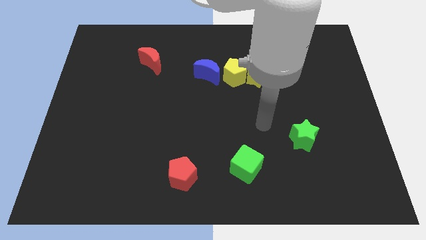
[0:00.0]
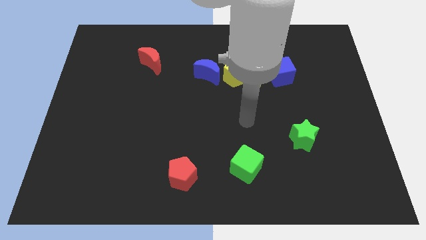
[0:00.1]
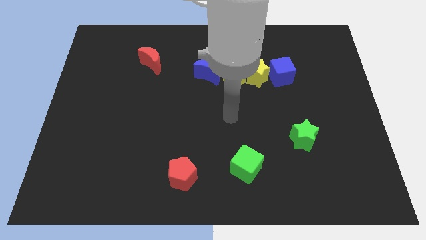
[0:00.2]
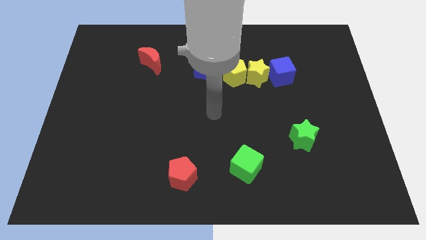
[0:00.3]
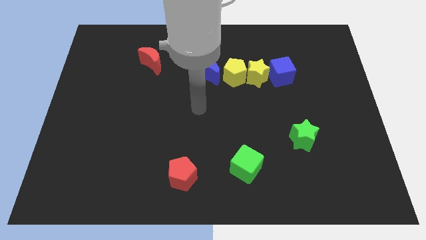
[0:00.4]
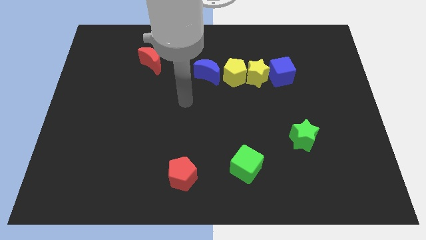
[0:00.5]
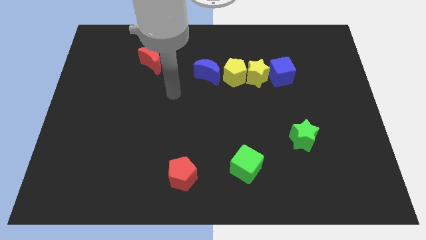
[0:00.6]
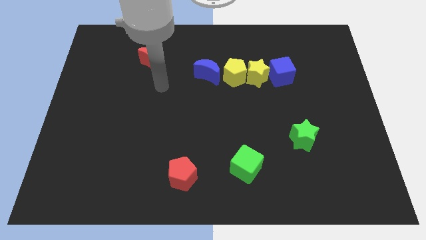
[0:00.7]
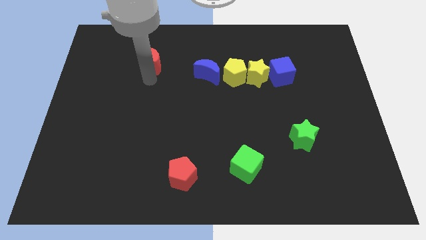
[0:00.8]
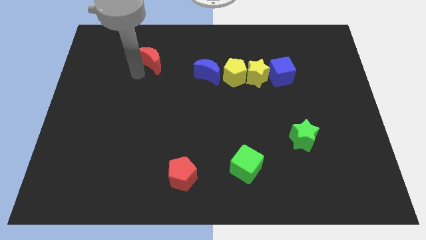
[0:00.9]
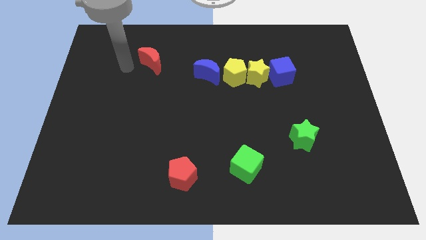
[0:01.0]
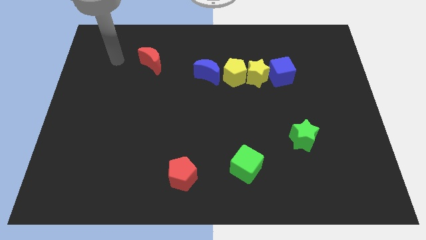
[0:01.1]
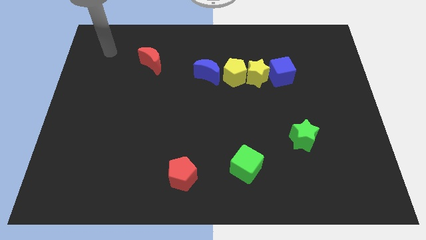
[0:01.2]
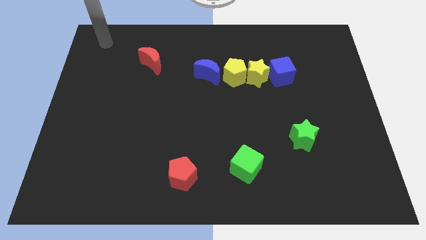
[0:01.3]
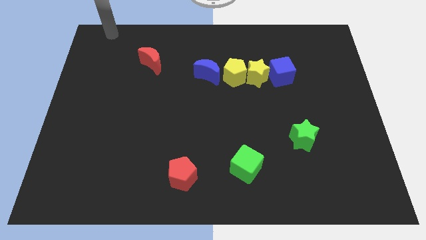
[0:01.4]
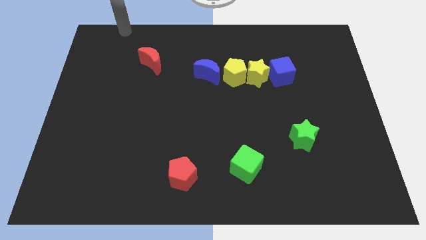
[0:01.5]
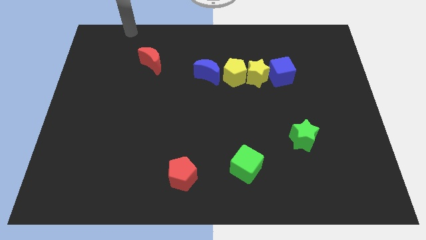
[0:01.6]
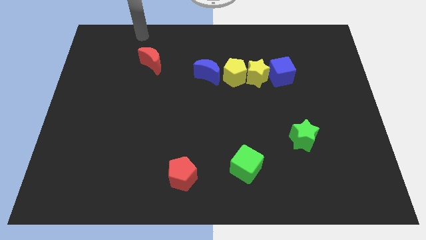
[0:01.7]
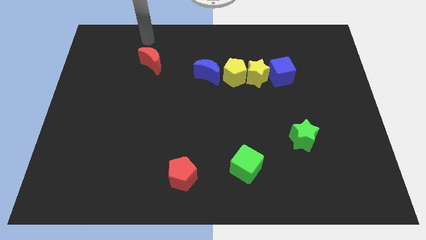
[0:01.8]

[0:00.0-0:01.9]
move the arm around the red crescent

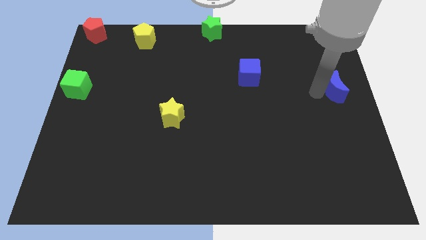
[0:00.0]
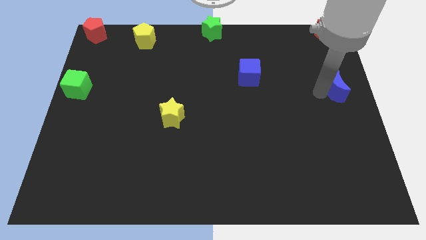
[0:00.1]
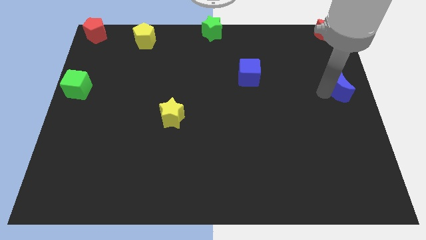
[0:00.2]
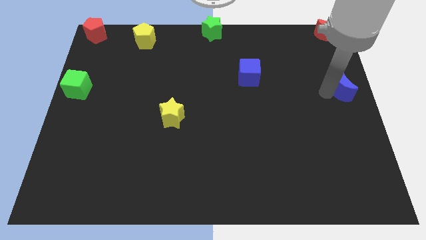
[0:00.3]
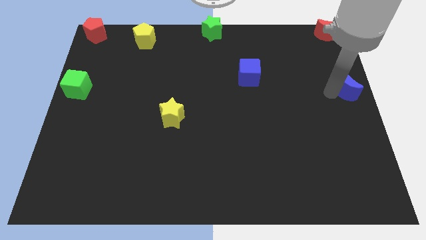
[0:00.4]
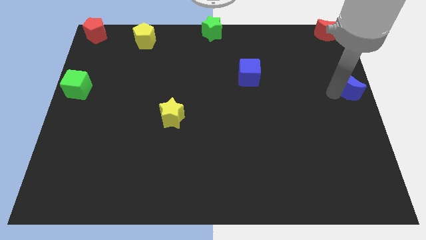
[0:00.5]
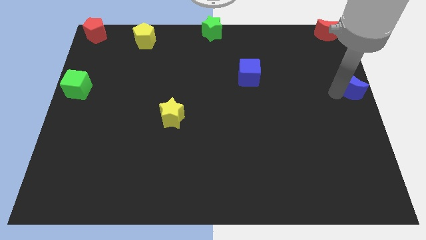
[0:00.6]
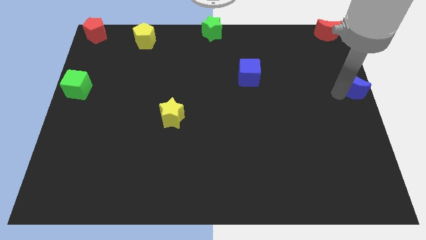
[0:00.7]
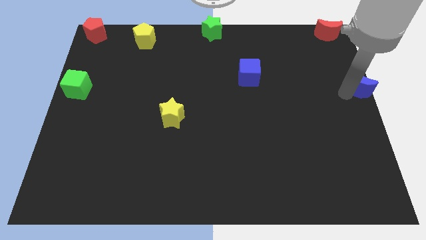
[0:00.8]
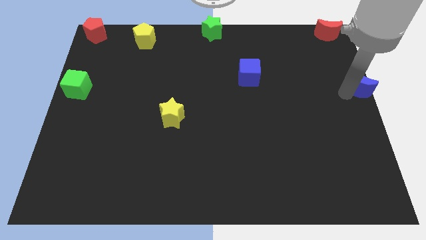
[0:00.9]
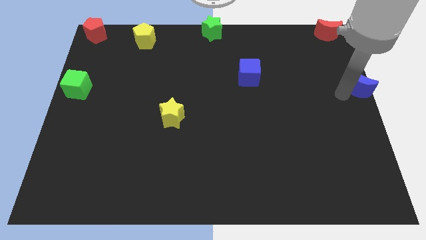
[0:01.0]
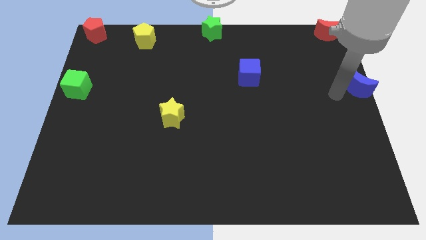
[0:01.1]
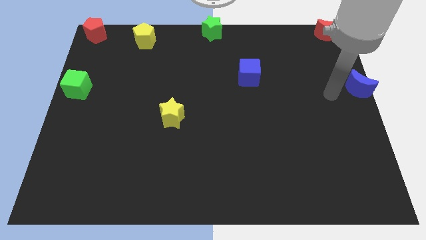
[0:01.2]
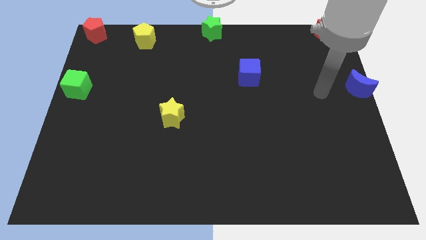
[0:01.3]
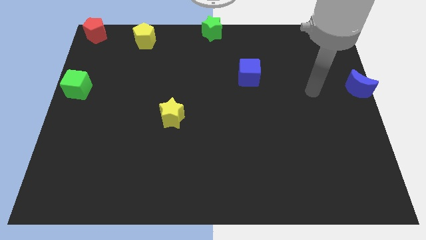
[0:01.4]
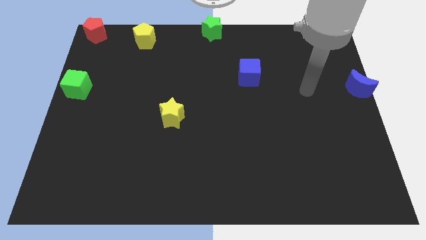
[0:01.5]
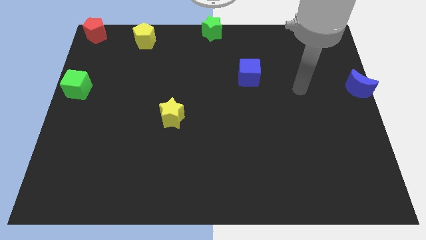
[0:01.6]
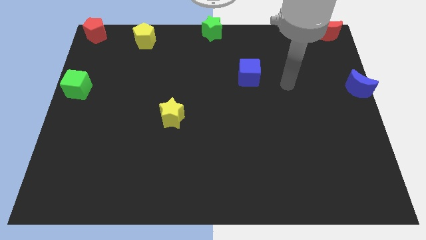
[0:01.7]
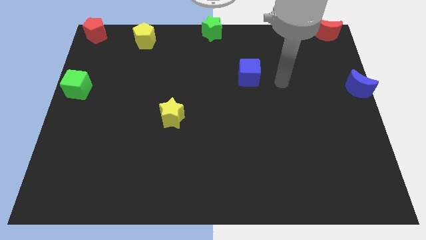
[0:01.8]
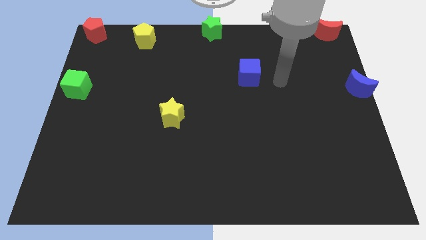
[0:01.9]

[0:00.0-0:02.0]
move blue cube to the right of the board

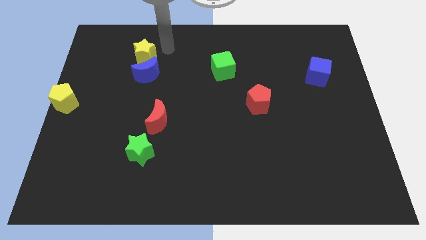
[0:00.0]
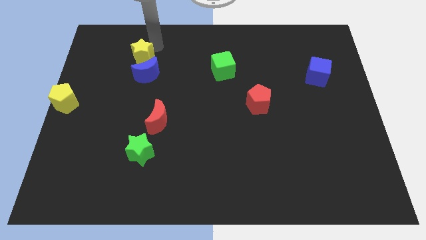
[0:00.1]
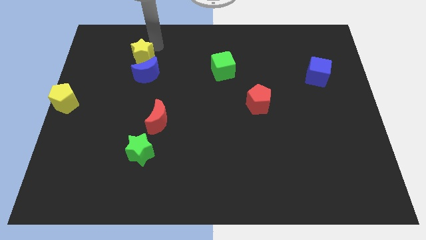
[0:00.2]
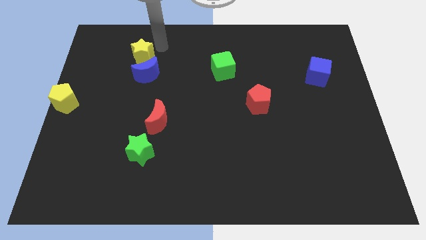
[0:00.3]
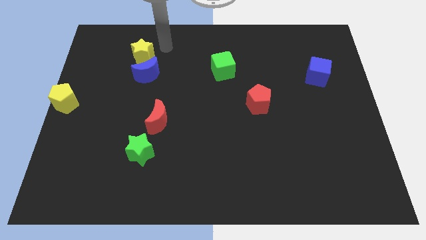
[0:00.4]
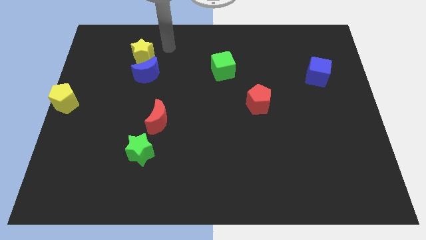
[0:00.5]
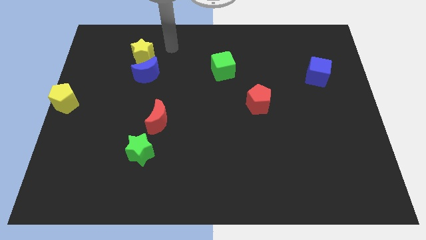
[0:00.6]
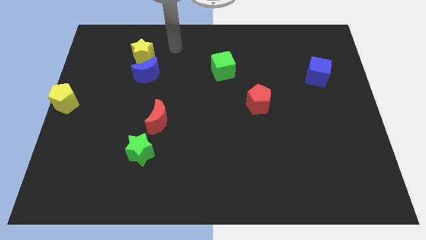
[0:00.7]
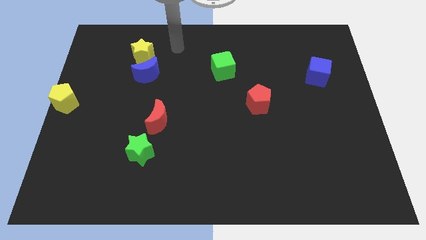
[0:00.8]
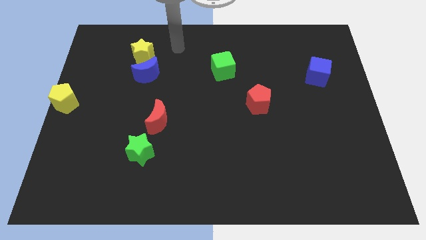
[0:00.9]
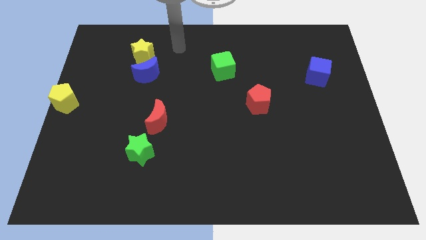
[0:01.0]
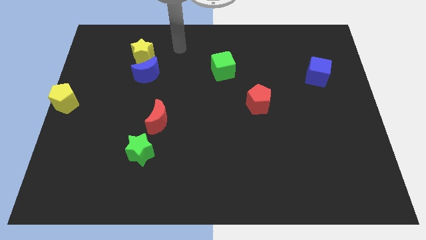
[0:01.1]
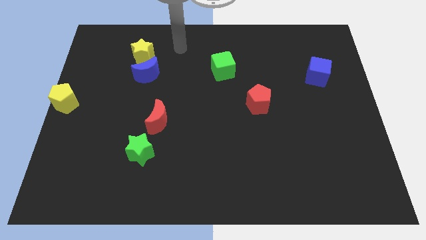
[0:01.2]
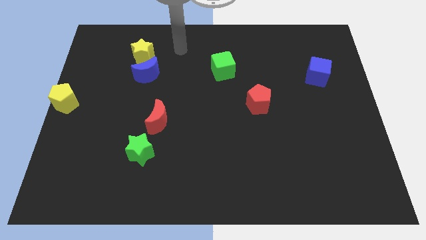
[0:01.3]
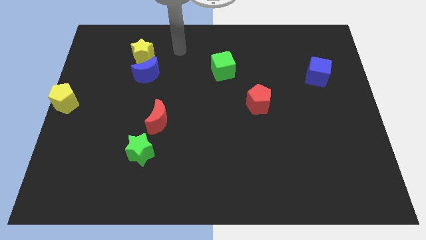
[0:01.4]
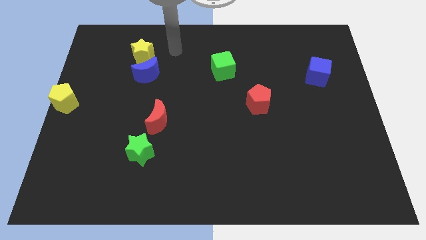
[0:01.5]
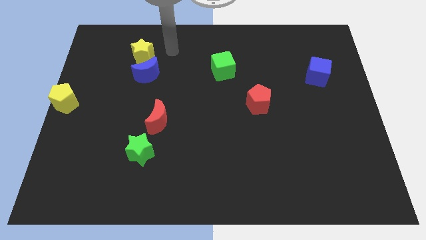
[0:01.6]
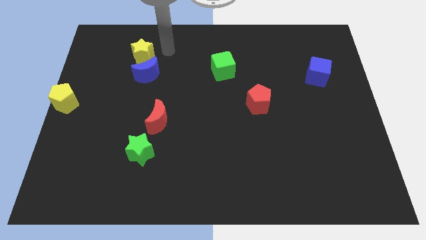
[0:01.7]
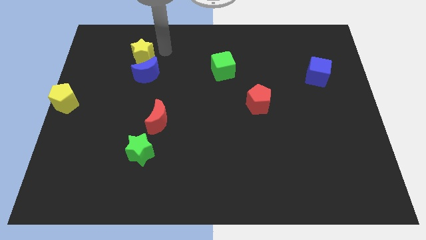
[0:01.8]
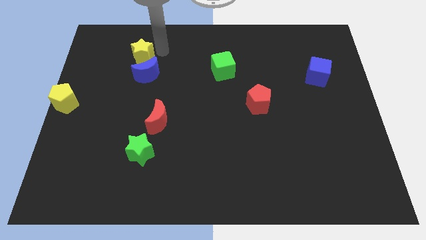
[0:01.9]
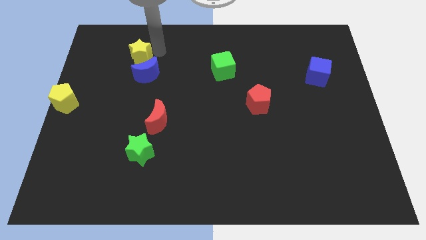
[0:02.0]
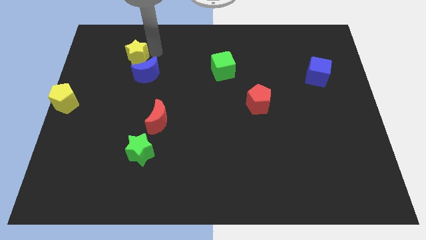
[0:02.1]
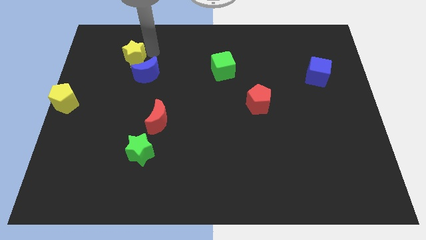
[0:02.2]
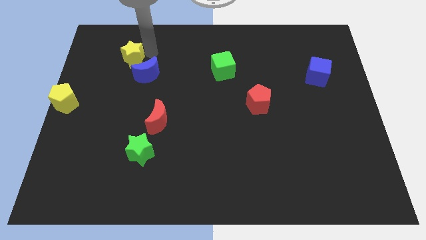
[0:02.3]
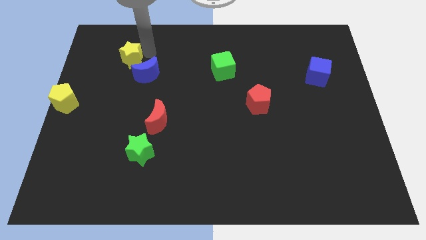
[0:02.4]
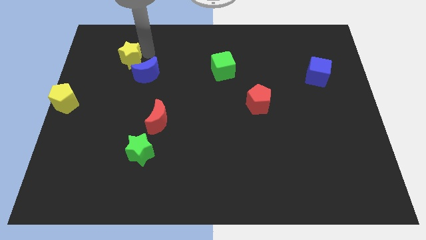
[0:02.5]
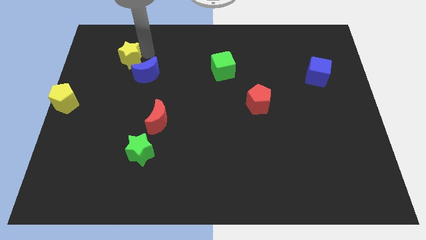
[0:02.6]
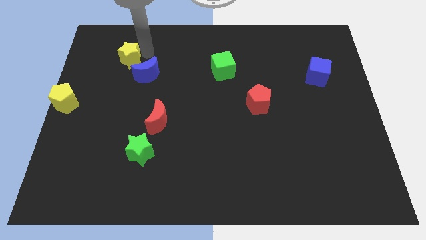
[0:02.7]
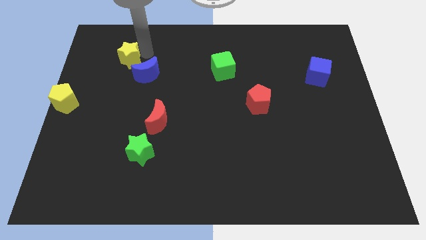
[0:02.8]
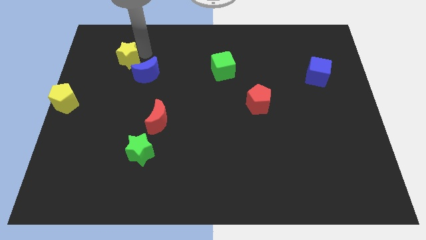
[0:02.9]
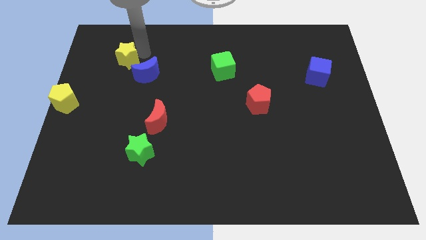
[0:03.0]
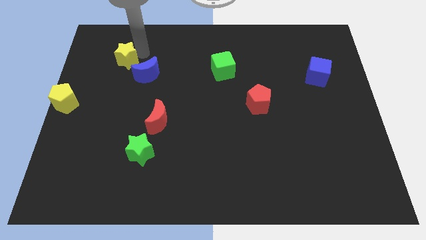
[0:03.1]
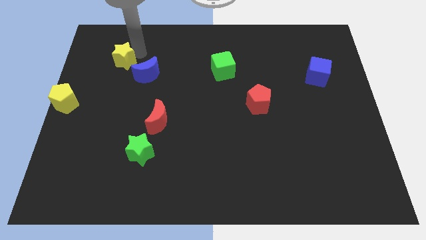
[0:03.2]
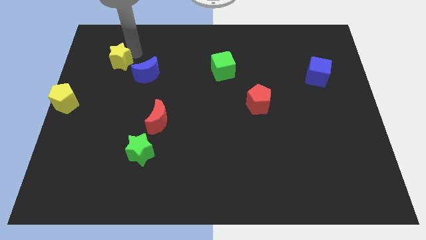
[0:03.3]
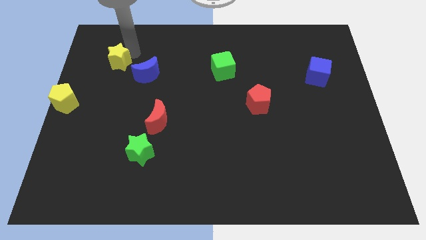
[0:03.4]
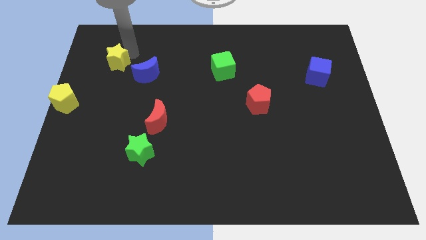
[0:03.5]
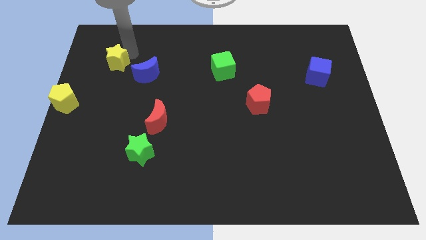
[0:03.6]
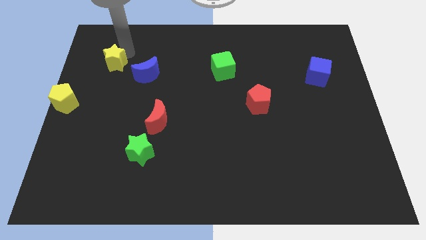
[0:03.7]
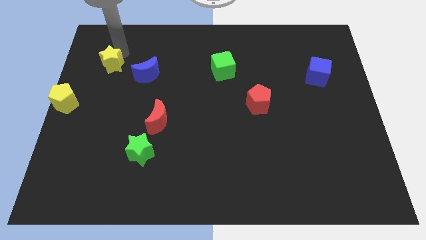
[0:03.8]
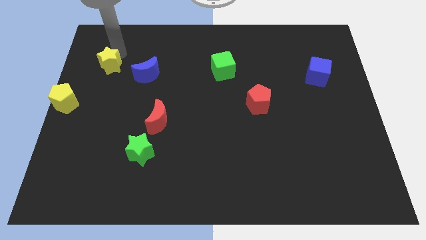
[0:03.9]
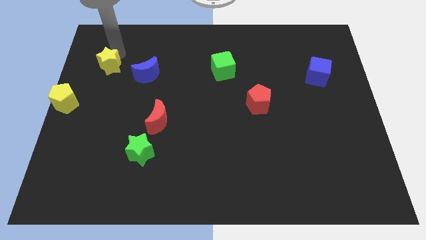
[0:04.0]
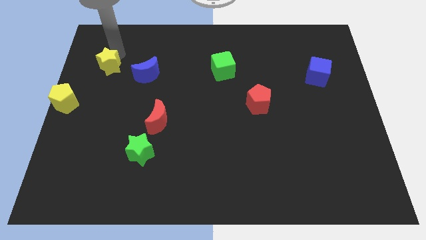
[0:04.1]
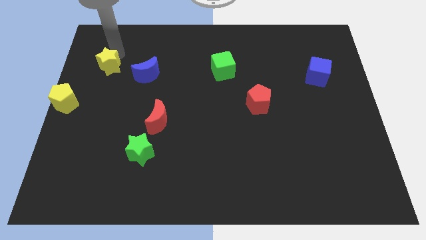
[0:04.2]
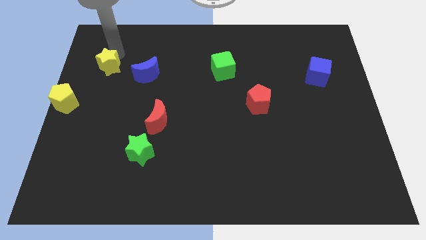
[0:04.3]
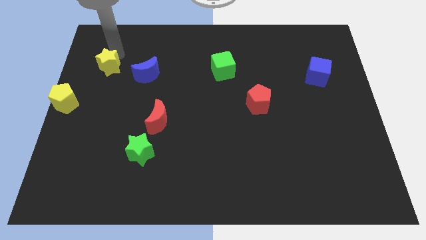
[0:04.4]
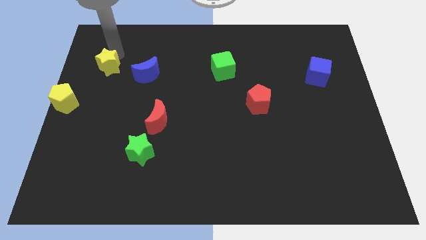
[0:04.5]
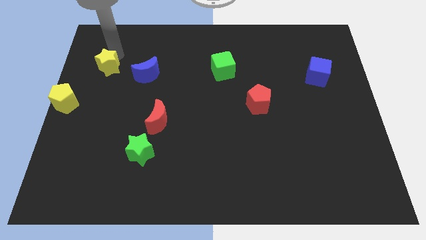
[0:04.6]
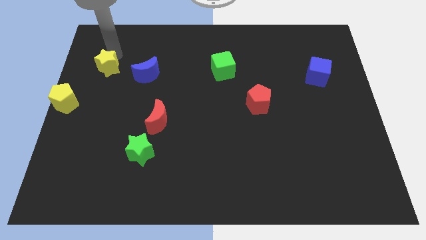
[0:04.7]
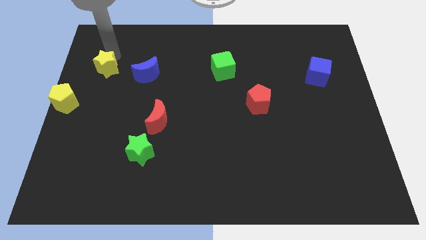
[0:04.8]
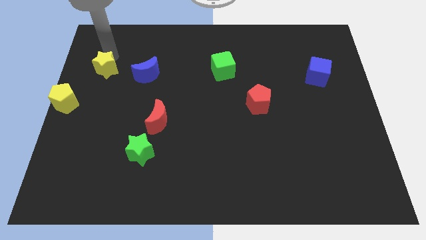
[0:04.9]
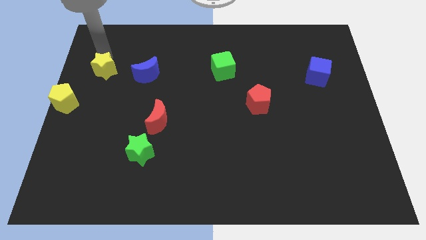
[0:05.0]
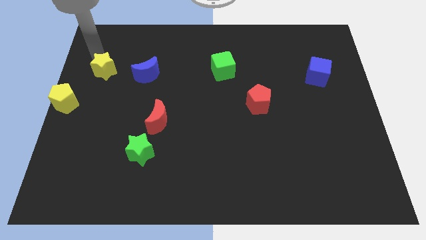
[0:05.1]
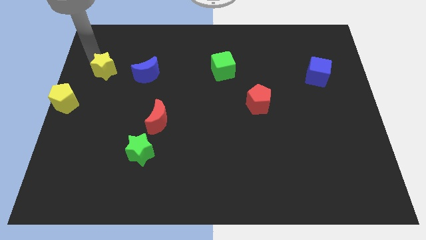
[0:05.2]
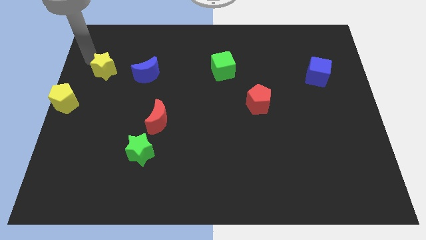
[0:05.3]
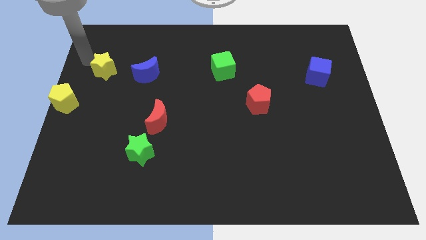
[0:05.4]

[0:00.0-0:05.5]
move the yellow star at the left side of the blue crescent
